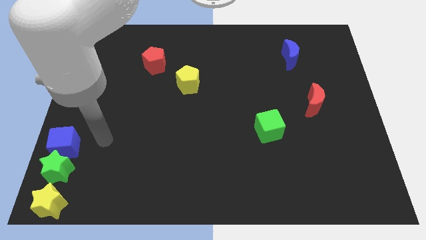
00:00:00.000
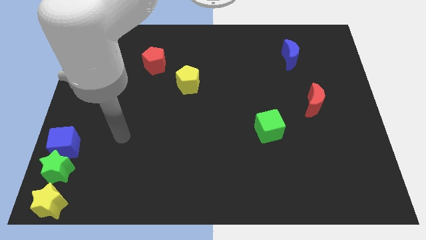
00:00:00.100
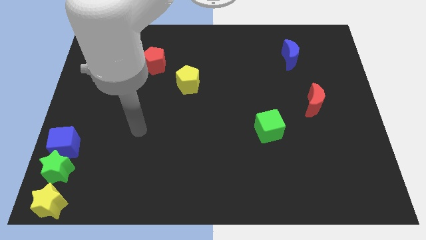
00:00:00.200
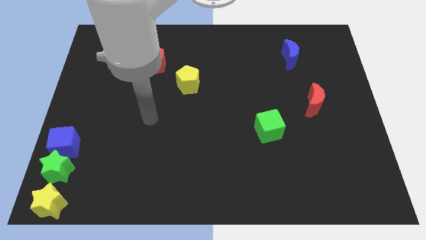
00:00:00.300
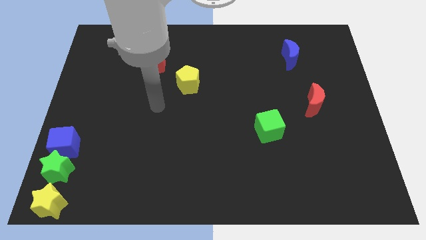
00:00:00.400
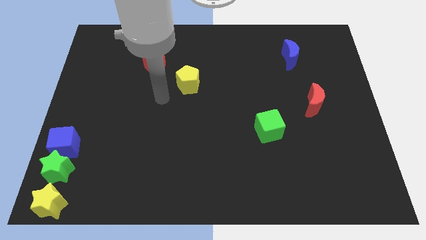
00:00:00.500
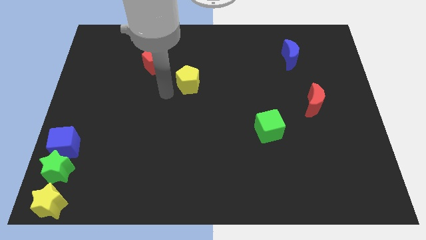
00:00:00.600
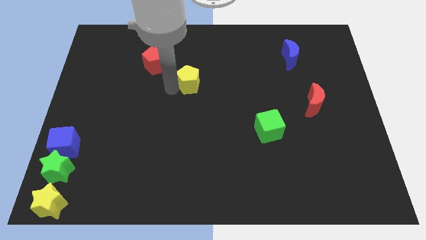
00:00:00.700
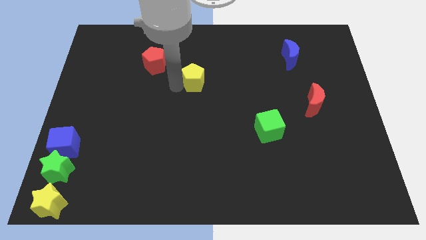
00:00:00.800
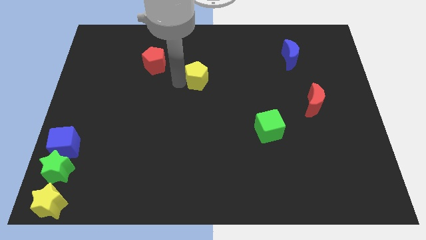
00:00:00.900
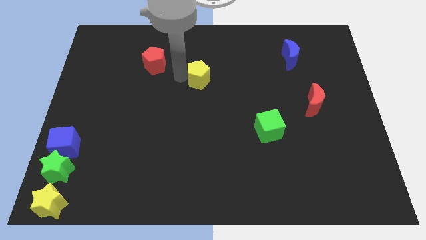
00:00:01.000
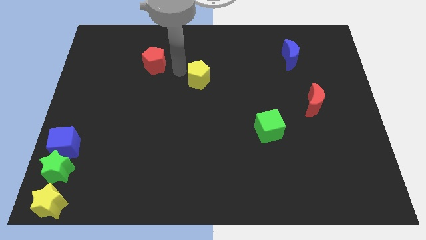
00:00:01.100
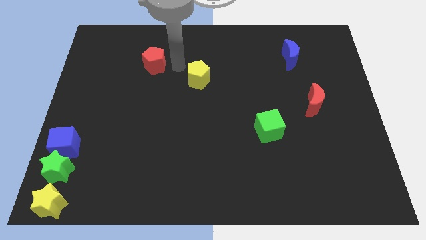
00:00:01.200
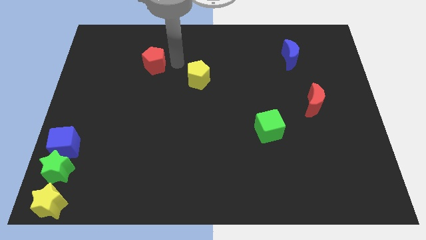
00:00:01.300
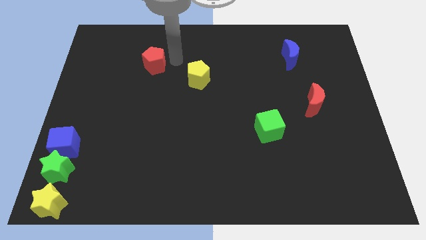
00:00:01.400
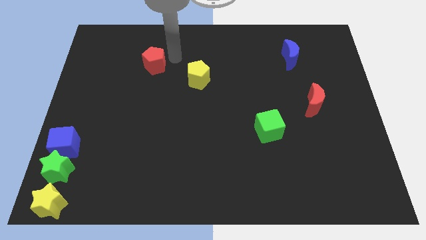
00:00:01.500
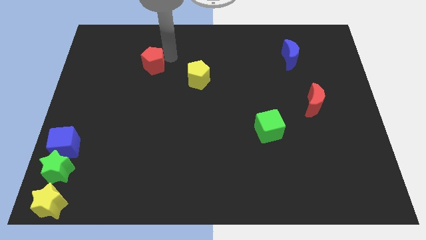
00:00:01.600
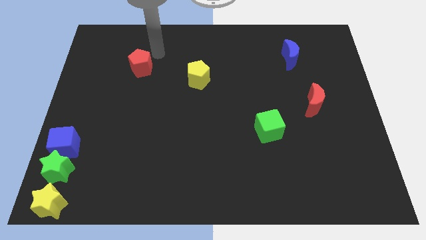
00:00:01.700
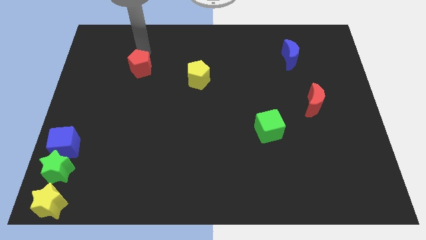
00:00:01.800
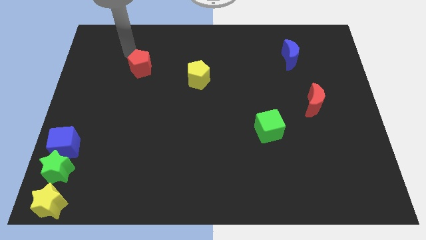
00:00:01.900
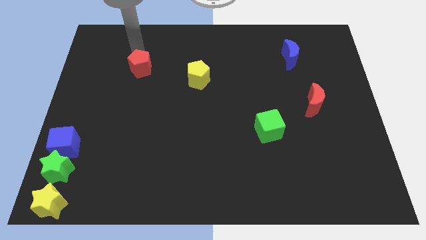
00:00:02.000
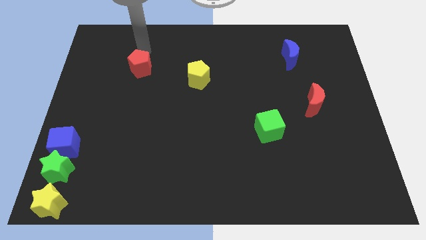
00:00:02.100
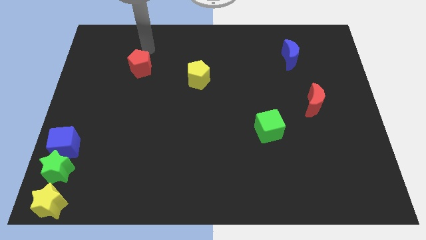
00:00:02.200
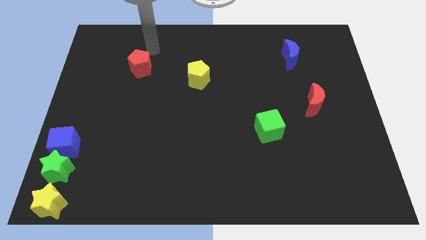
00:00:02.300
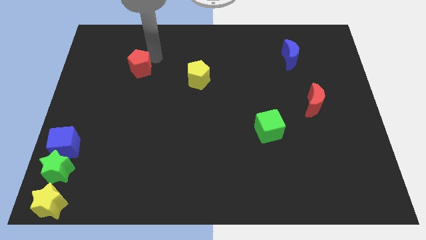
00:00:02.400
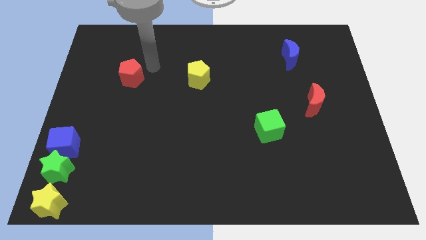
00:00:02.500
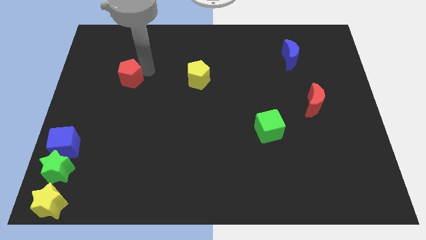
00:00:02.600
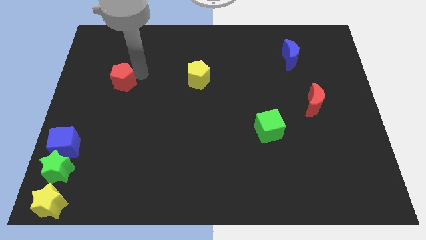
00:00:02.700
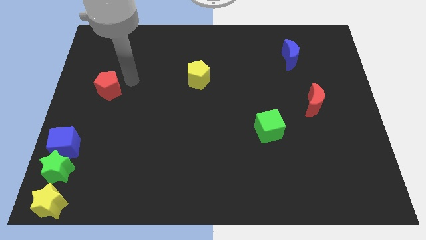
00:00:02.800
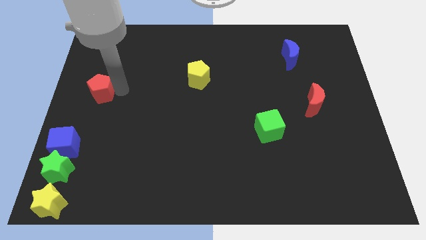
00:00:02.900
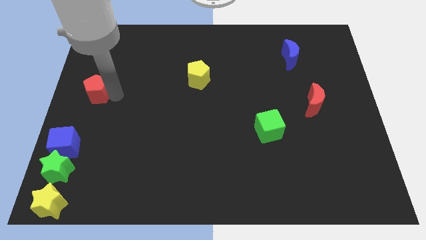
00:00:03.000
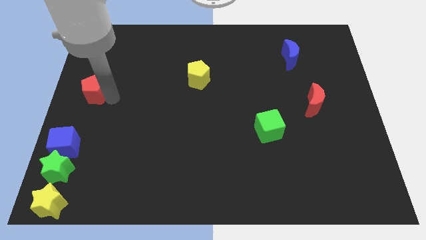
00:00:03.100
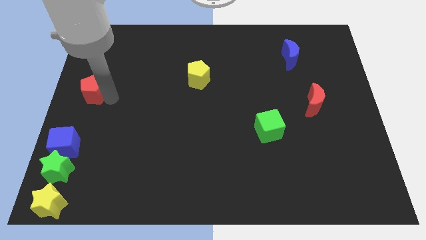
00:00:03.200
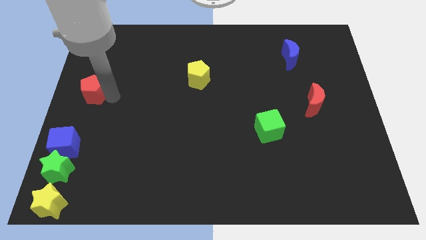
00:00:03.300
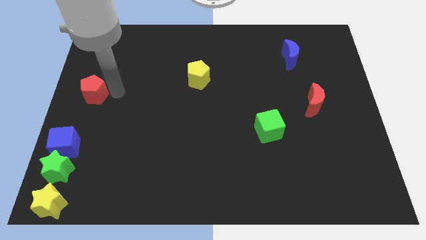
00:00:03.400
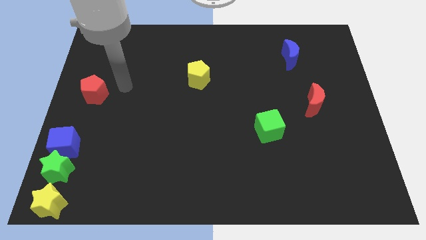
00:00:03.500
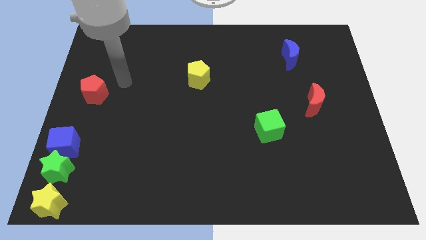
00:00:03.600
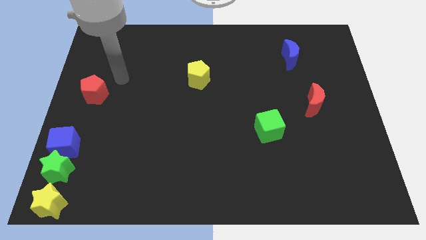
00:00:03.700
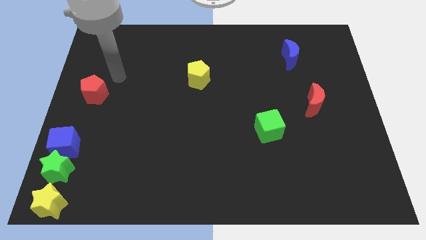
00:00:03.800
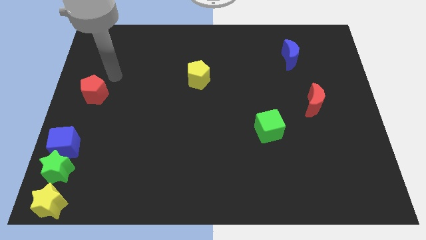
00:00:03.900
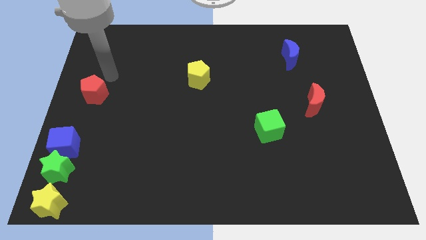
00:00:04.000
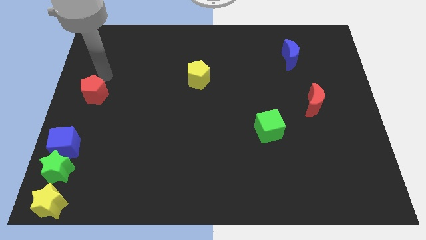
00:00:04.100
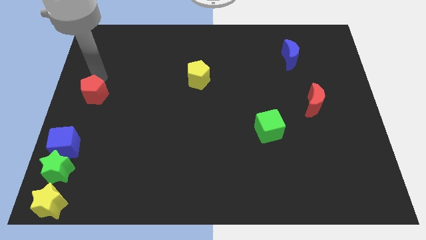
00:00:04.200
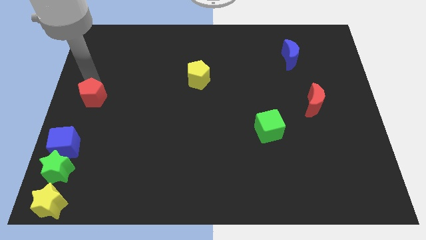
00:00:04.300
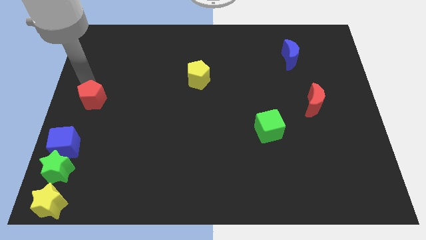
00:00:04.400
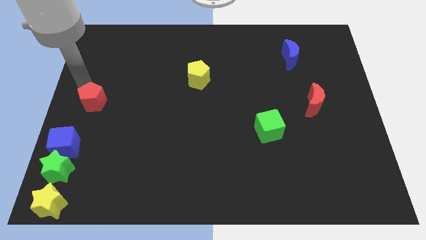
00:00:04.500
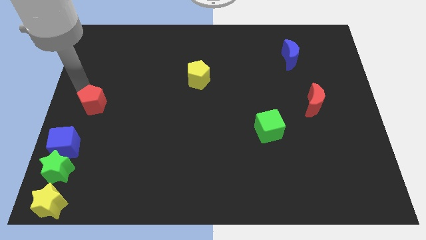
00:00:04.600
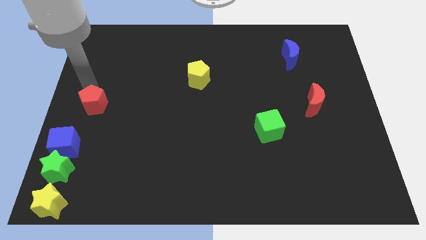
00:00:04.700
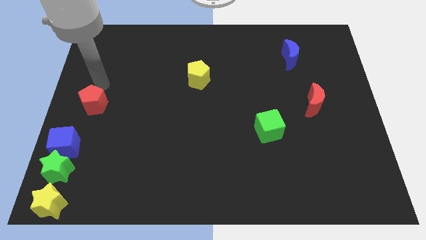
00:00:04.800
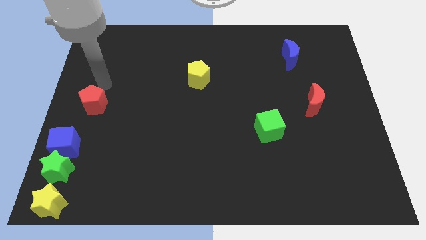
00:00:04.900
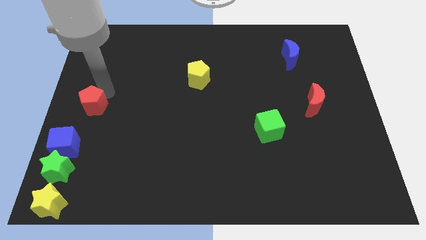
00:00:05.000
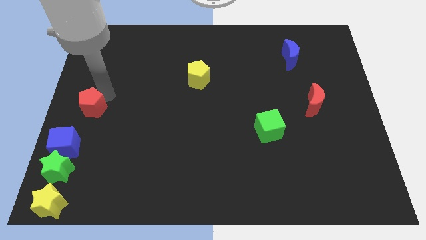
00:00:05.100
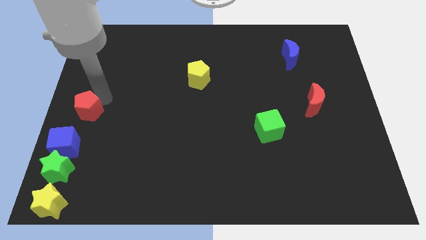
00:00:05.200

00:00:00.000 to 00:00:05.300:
move the red pentagon to the top right of the blue cube

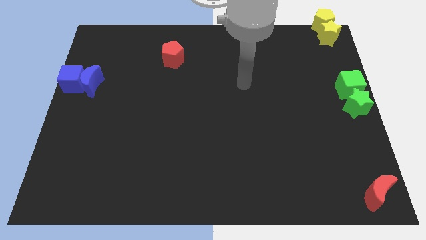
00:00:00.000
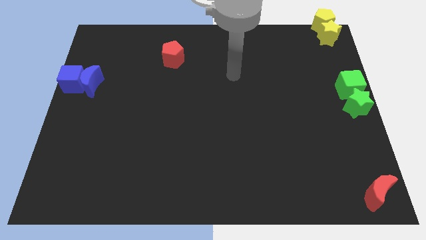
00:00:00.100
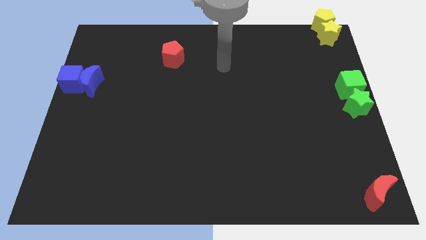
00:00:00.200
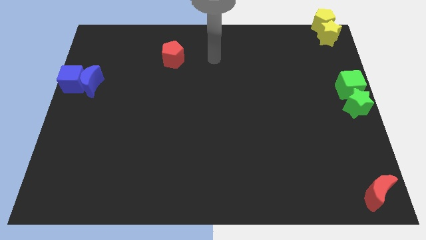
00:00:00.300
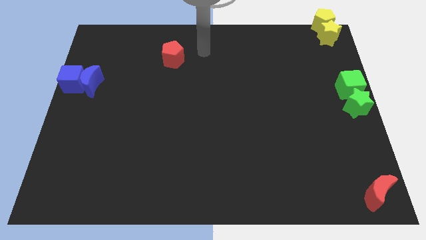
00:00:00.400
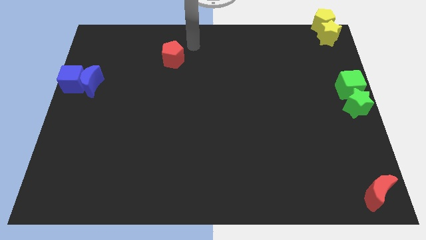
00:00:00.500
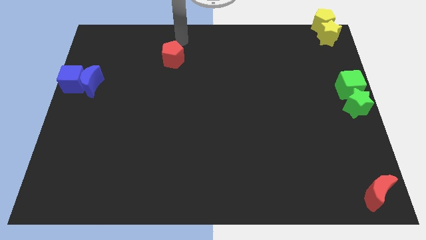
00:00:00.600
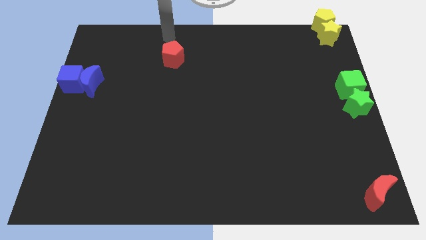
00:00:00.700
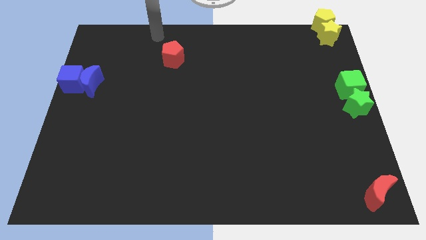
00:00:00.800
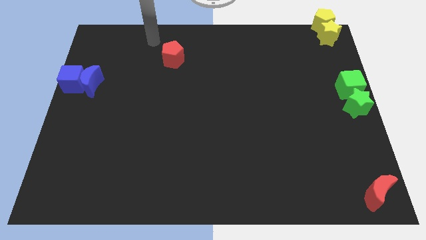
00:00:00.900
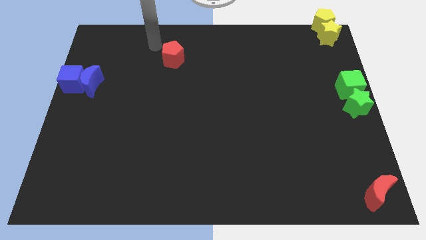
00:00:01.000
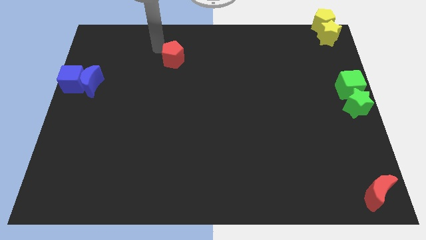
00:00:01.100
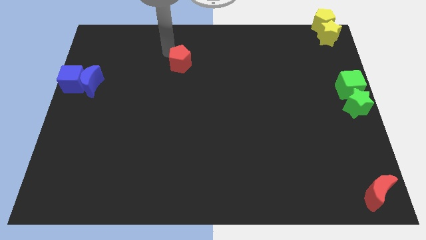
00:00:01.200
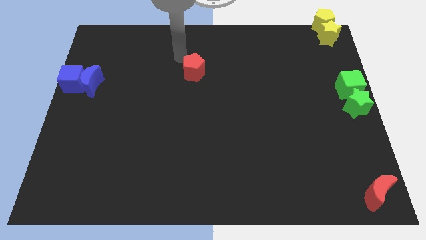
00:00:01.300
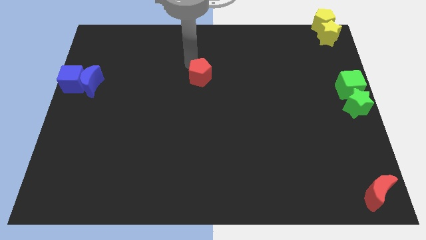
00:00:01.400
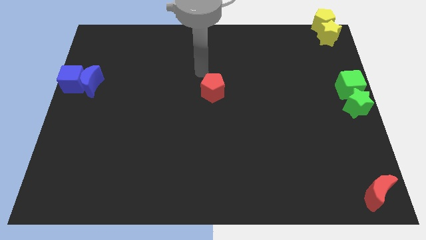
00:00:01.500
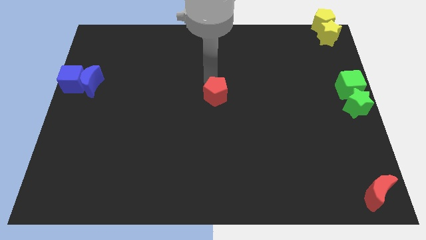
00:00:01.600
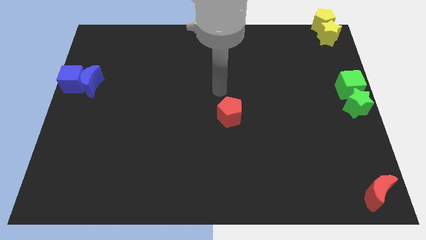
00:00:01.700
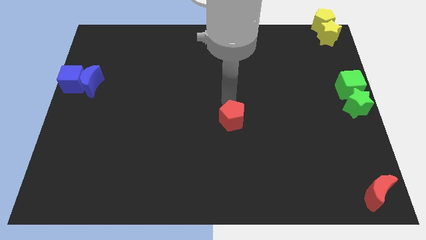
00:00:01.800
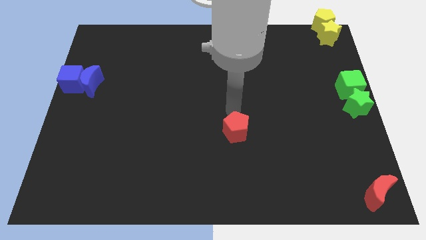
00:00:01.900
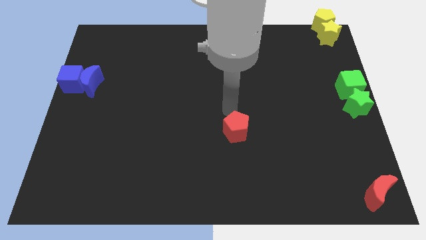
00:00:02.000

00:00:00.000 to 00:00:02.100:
move the red pentagon towards the bottom center of the board

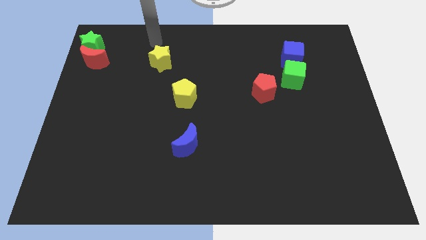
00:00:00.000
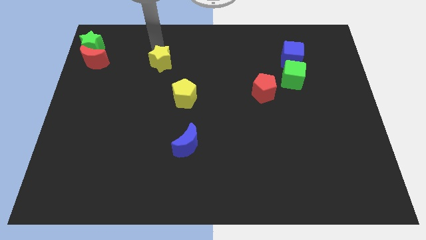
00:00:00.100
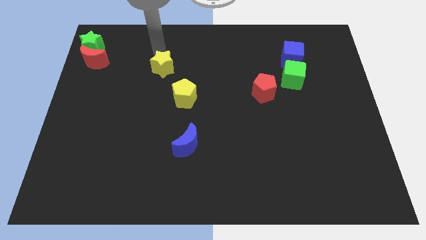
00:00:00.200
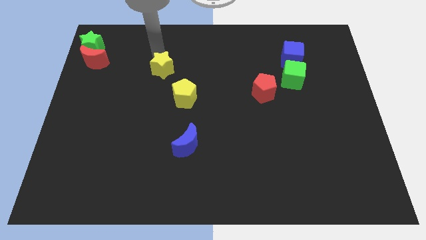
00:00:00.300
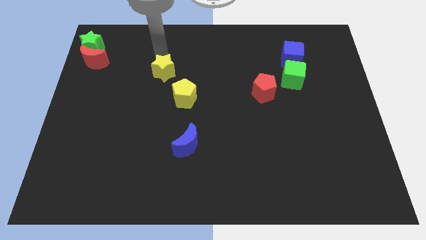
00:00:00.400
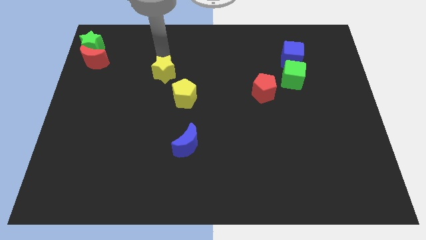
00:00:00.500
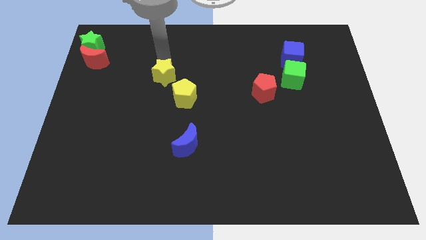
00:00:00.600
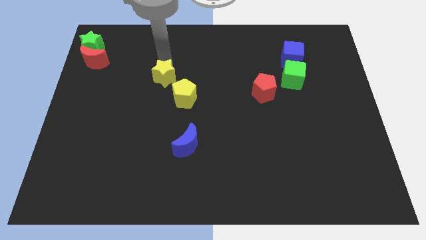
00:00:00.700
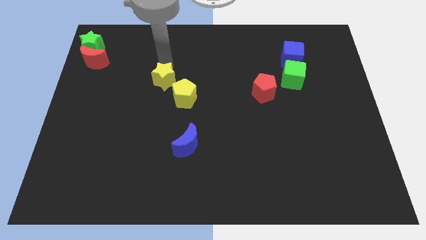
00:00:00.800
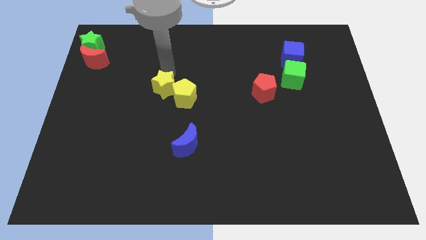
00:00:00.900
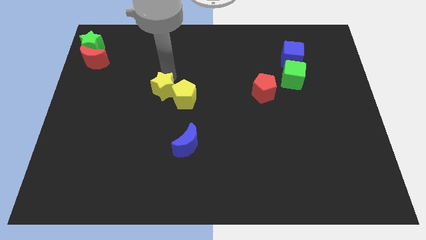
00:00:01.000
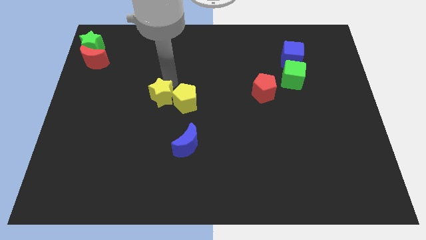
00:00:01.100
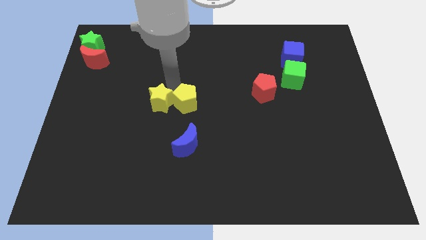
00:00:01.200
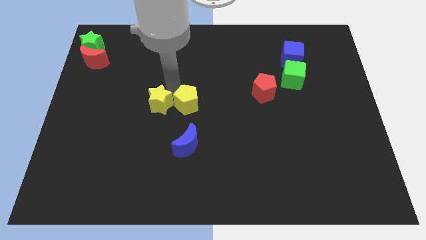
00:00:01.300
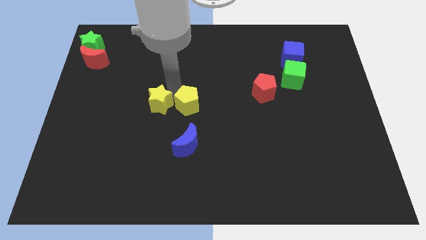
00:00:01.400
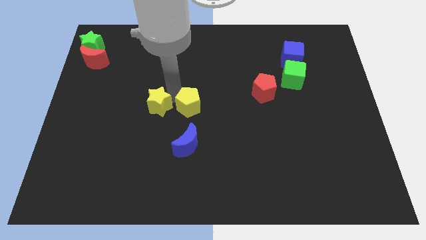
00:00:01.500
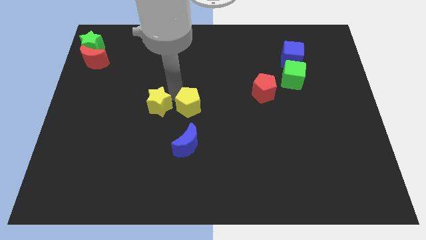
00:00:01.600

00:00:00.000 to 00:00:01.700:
place the yellow star left to the yellow pentagon

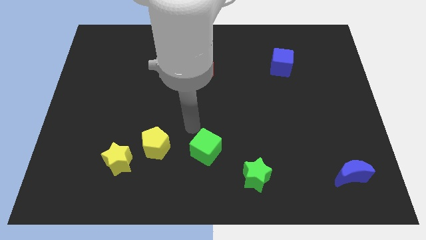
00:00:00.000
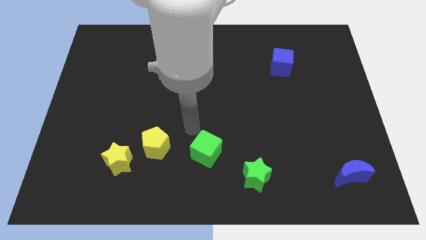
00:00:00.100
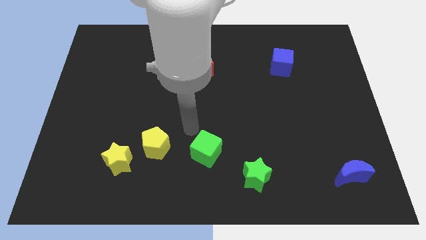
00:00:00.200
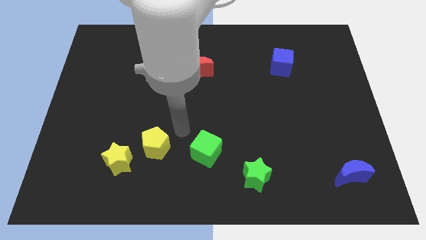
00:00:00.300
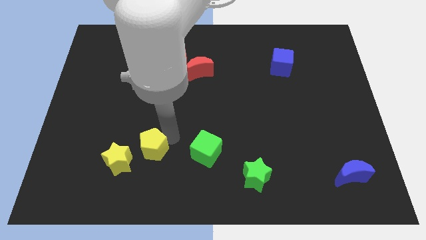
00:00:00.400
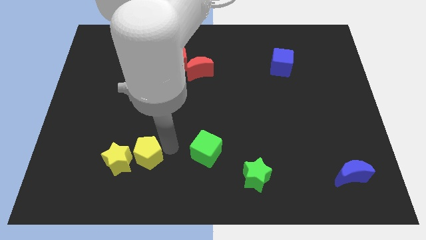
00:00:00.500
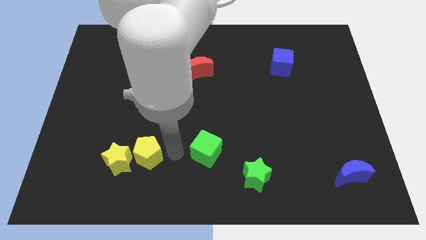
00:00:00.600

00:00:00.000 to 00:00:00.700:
slightly push the yellow pentagon
